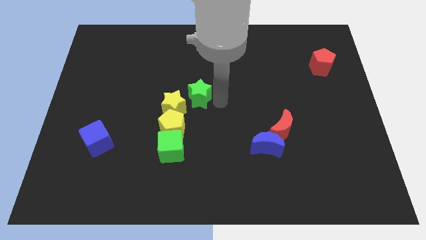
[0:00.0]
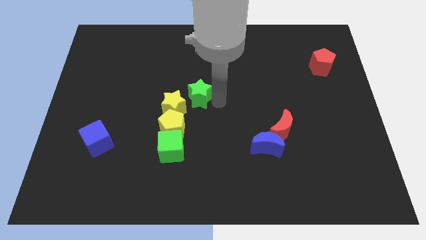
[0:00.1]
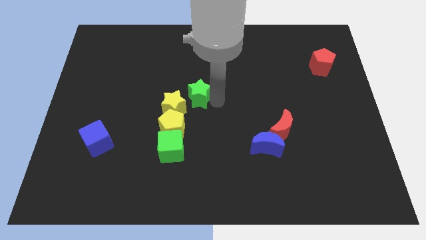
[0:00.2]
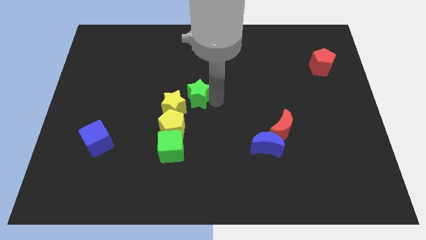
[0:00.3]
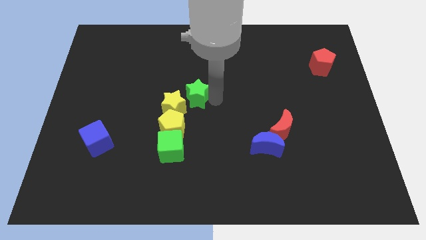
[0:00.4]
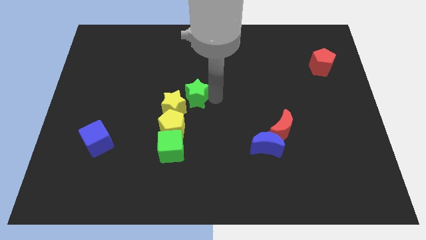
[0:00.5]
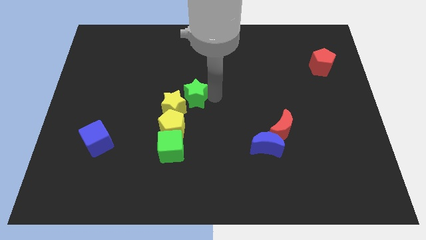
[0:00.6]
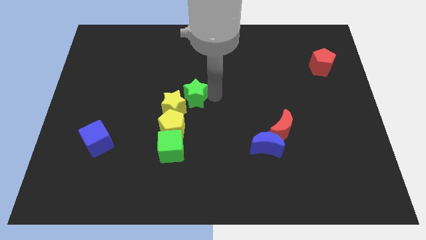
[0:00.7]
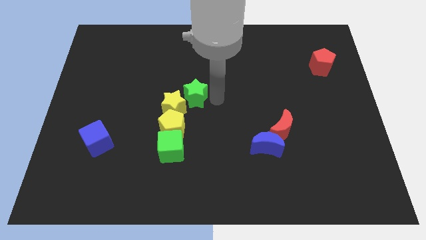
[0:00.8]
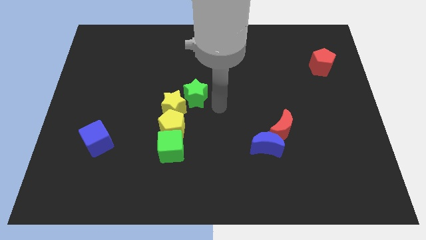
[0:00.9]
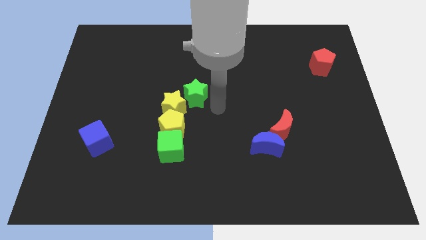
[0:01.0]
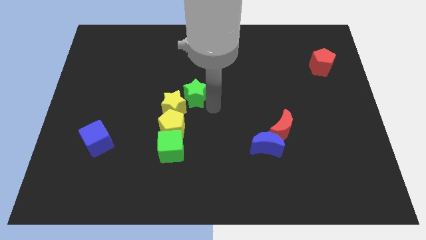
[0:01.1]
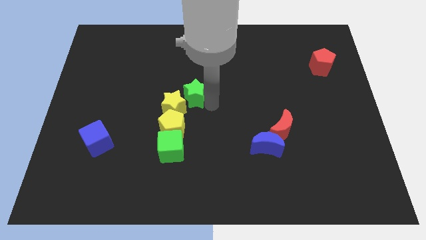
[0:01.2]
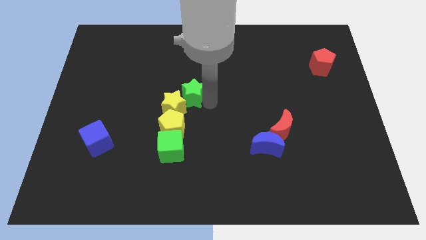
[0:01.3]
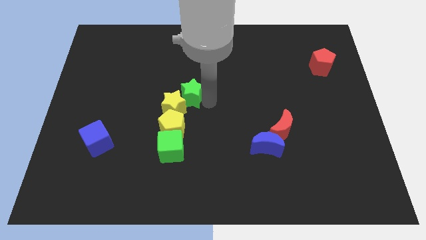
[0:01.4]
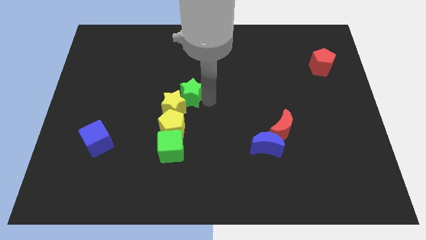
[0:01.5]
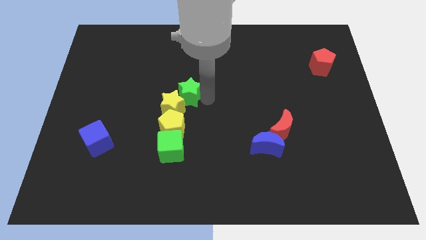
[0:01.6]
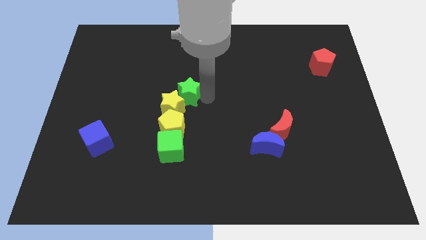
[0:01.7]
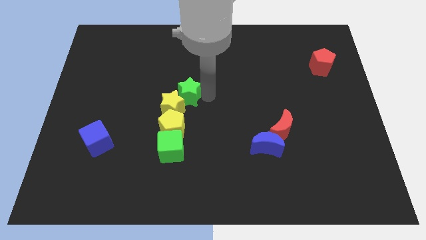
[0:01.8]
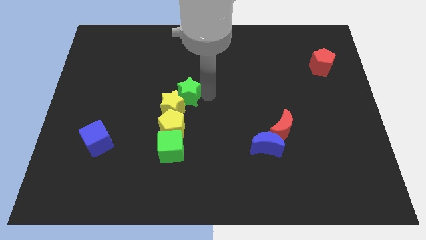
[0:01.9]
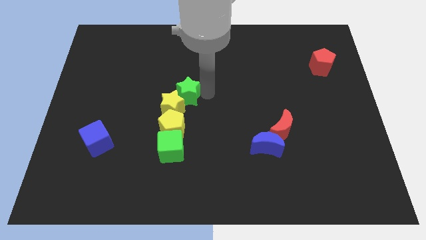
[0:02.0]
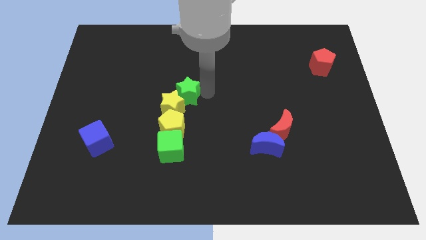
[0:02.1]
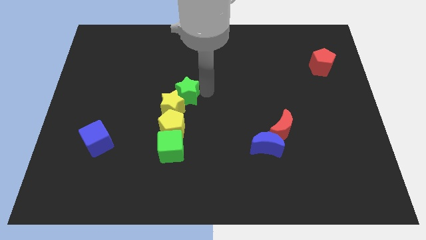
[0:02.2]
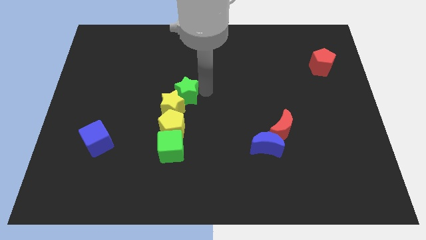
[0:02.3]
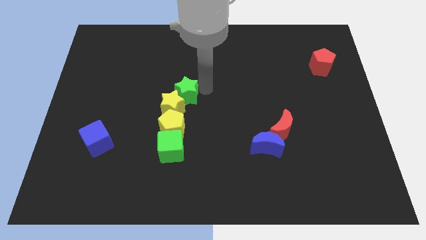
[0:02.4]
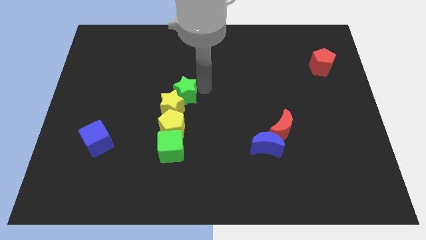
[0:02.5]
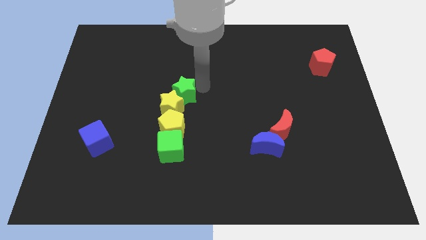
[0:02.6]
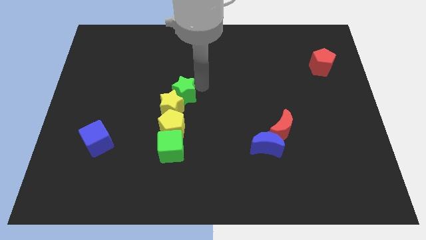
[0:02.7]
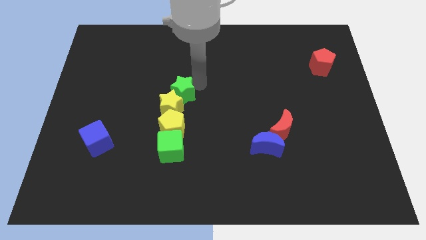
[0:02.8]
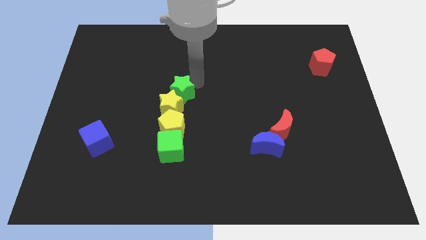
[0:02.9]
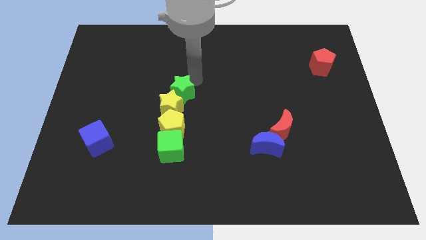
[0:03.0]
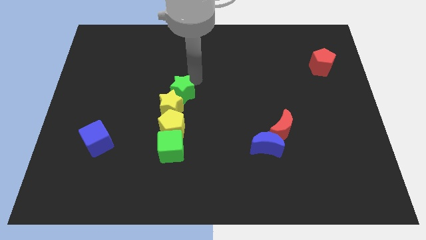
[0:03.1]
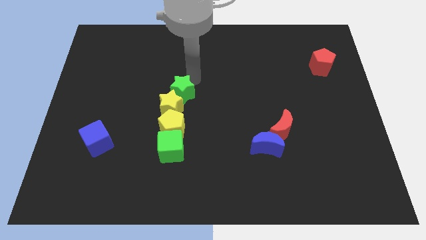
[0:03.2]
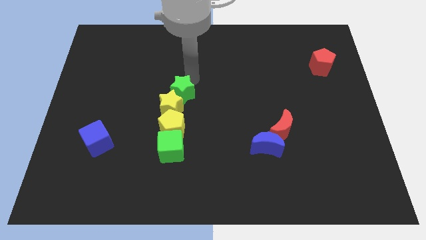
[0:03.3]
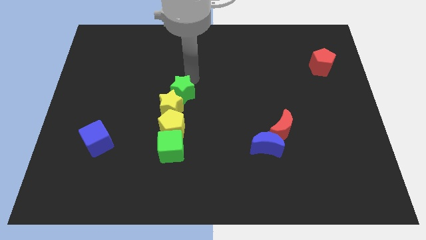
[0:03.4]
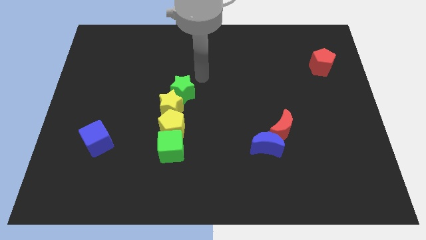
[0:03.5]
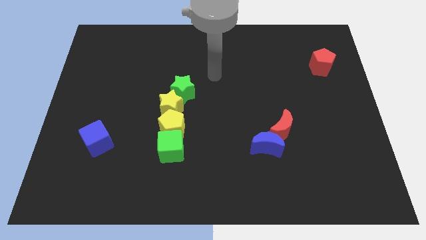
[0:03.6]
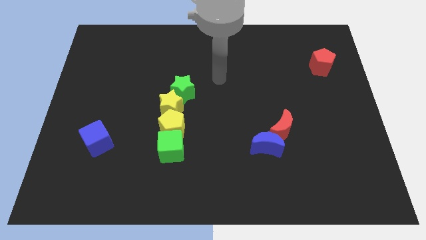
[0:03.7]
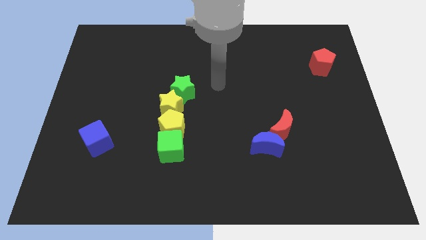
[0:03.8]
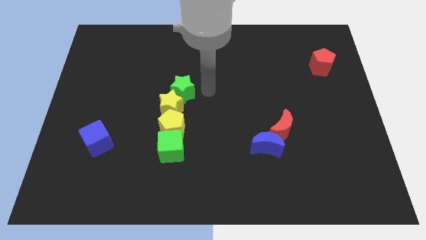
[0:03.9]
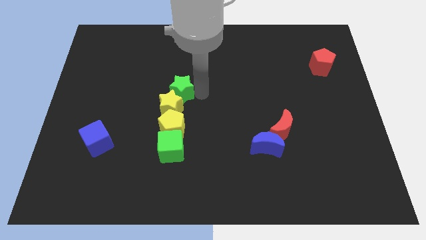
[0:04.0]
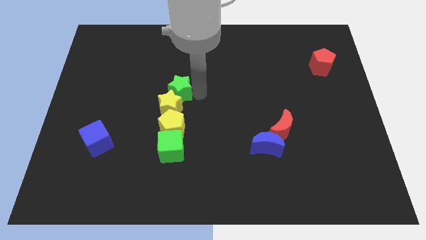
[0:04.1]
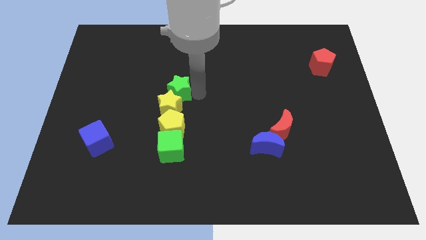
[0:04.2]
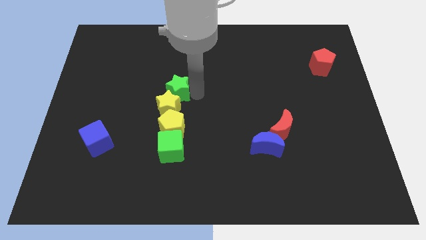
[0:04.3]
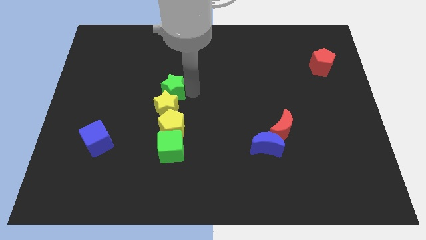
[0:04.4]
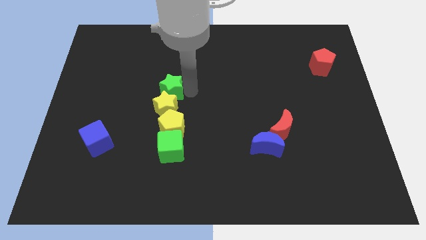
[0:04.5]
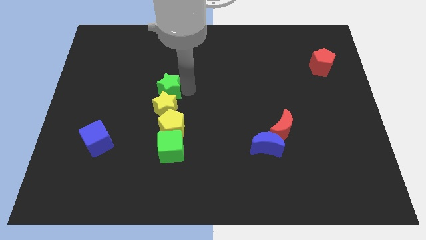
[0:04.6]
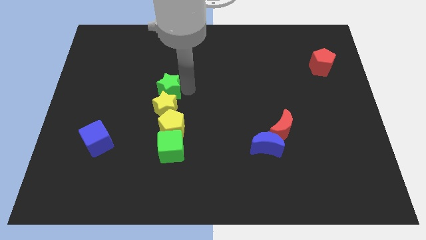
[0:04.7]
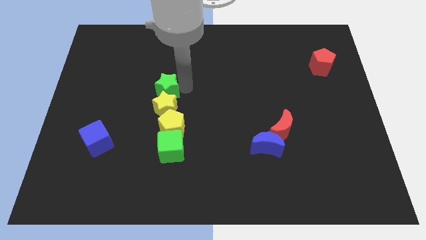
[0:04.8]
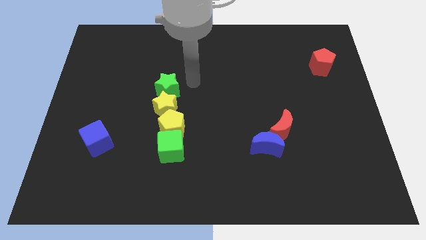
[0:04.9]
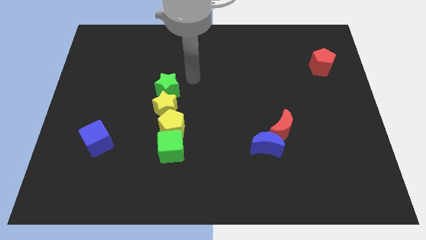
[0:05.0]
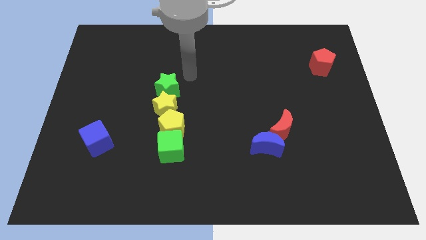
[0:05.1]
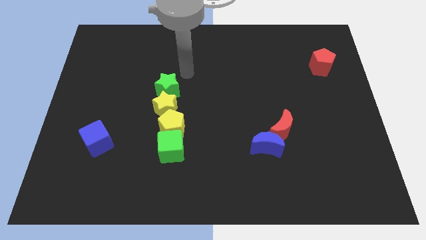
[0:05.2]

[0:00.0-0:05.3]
push the green star at the top side of the yellow star

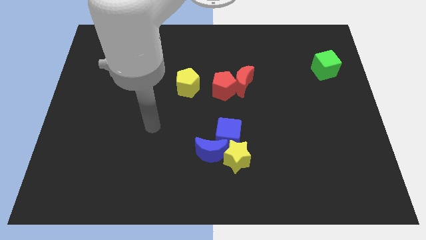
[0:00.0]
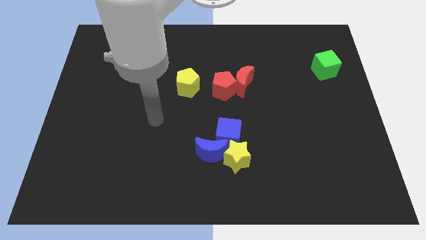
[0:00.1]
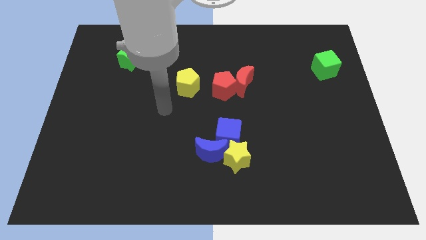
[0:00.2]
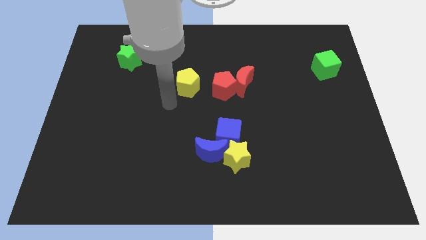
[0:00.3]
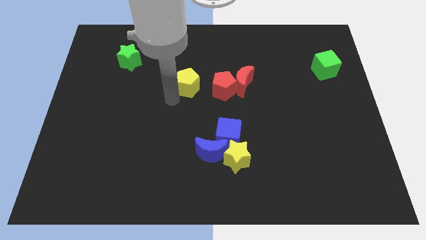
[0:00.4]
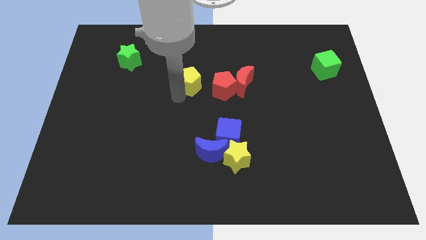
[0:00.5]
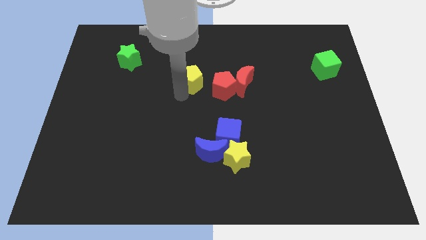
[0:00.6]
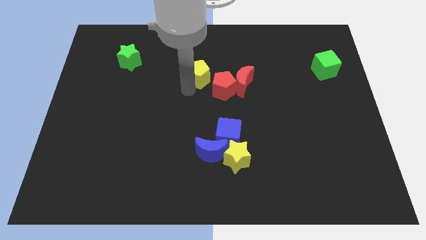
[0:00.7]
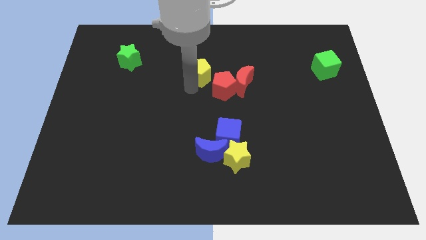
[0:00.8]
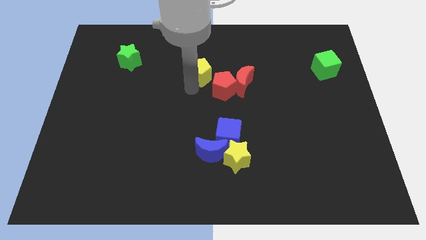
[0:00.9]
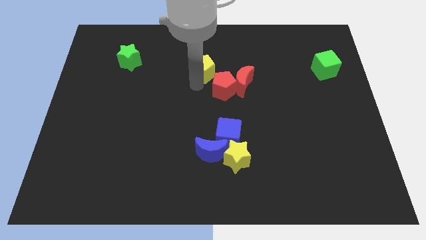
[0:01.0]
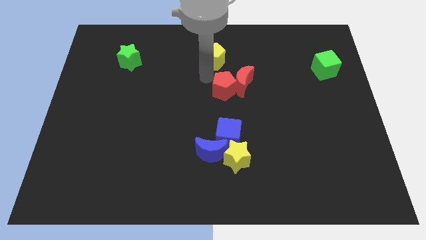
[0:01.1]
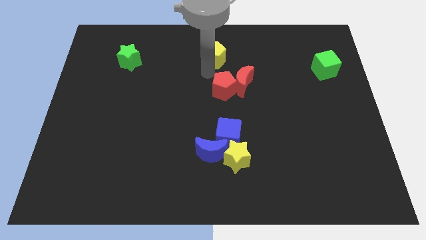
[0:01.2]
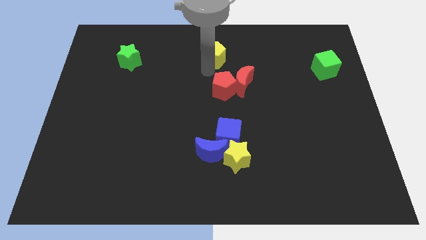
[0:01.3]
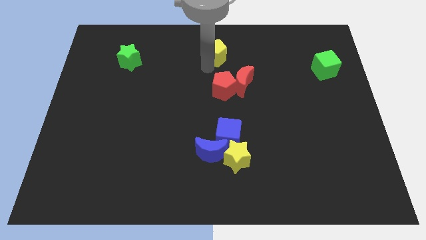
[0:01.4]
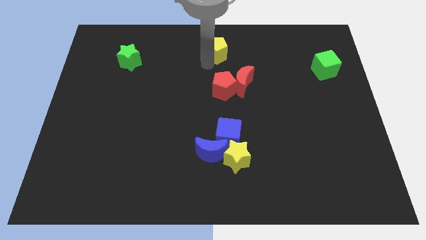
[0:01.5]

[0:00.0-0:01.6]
push the yellow pentagon to the top of the red pentagon

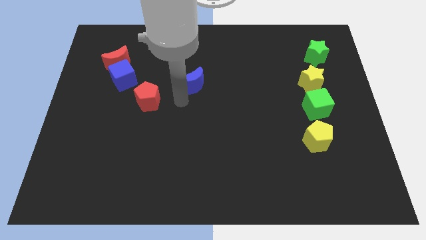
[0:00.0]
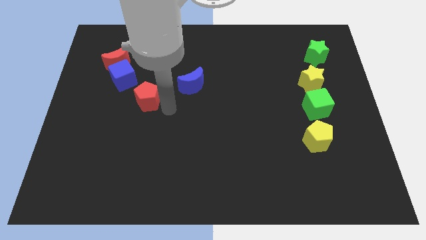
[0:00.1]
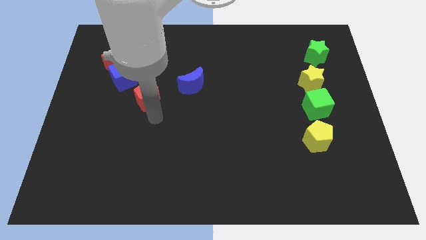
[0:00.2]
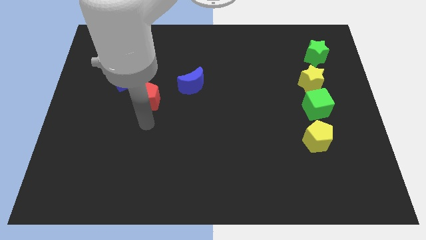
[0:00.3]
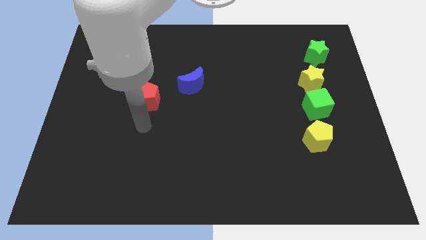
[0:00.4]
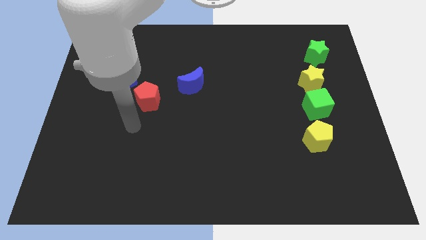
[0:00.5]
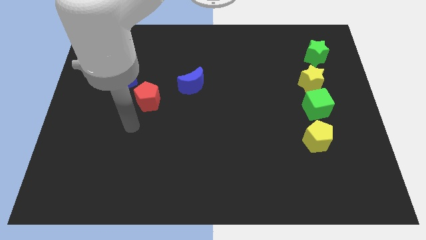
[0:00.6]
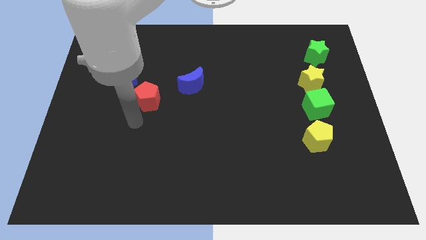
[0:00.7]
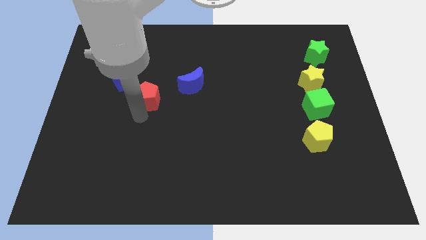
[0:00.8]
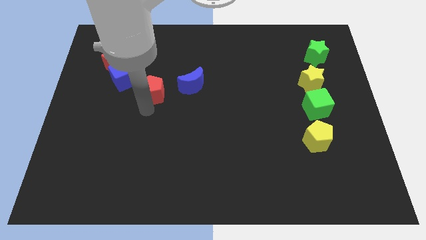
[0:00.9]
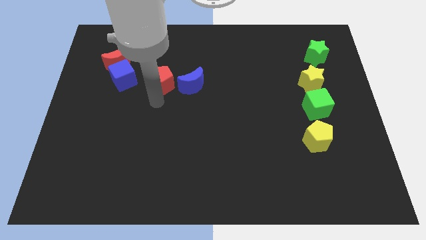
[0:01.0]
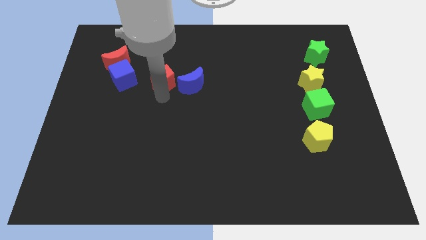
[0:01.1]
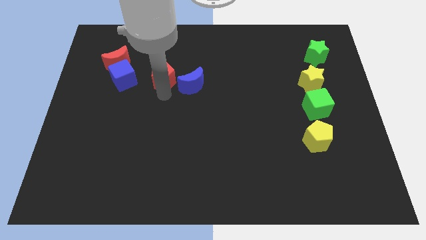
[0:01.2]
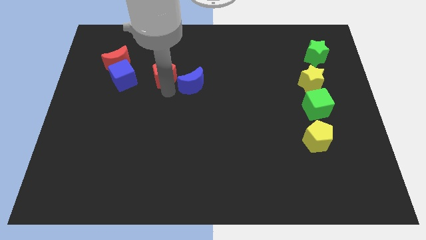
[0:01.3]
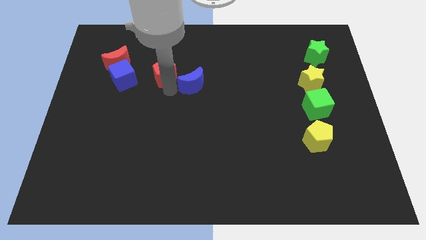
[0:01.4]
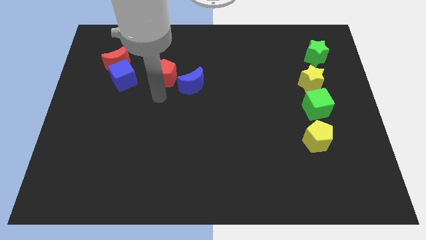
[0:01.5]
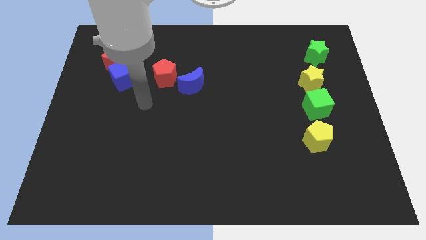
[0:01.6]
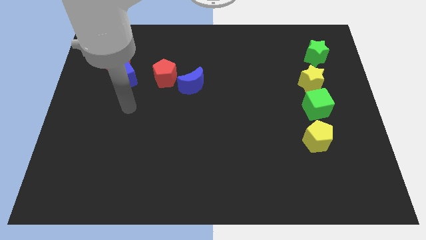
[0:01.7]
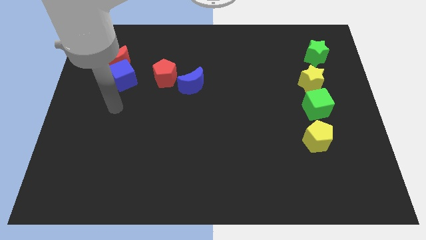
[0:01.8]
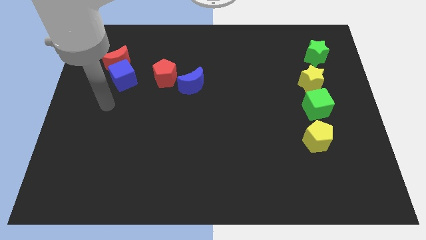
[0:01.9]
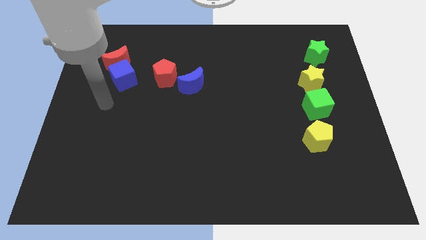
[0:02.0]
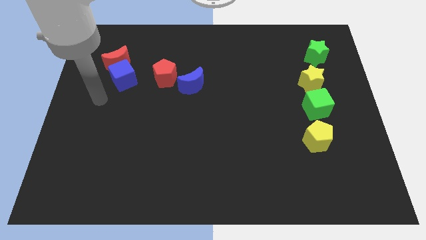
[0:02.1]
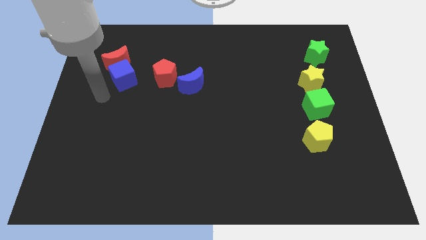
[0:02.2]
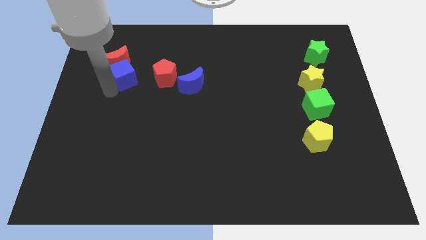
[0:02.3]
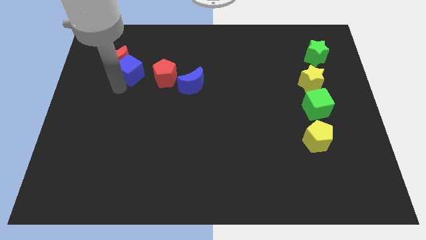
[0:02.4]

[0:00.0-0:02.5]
place the arm near the blue cube
